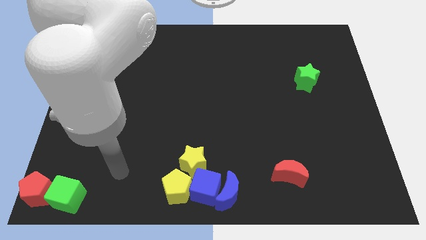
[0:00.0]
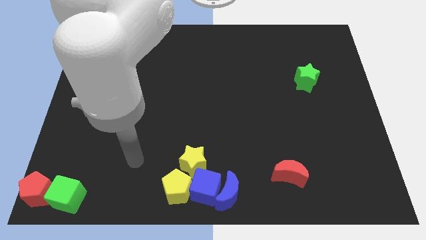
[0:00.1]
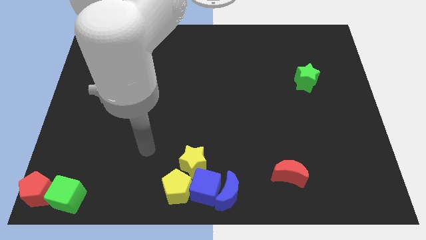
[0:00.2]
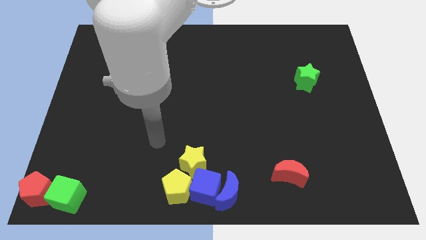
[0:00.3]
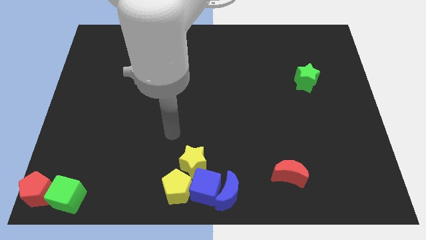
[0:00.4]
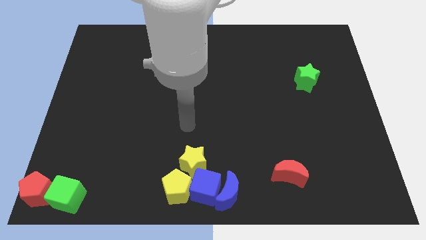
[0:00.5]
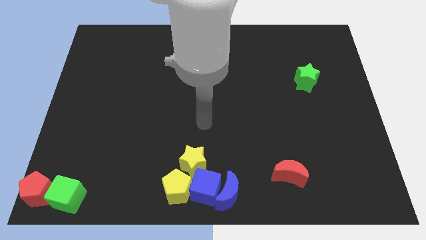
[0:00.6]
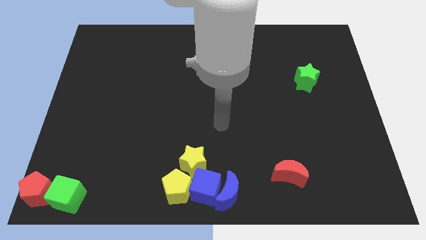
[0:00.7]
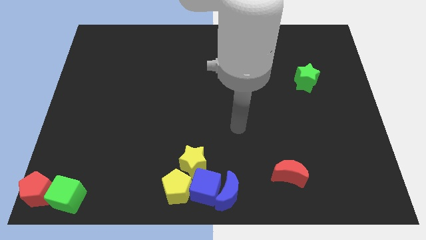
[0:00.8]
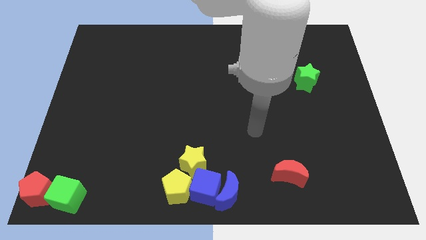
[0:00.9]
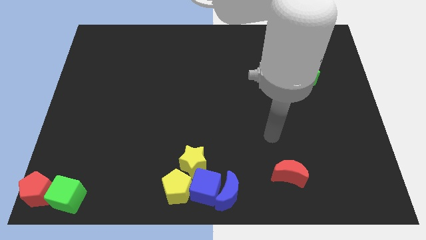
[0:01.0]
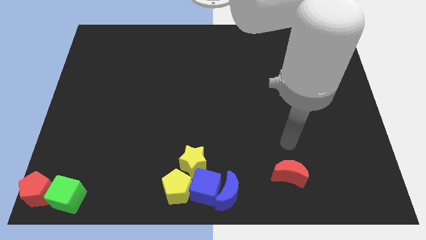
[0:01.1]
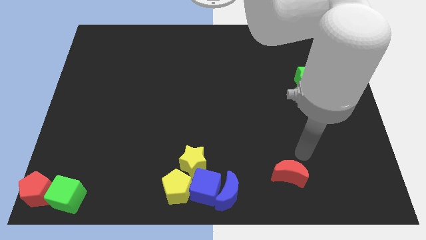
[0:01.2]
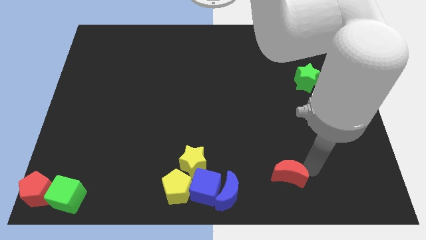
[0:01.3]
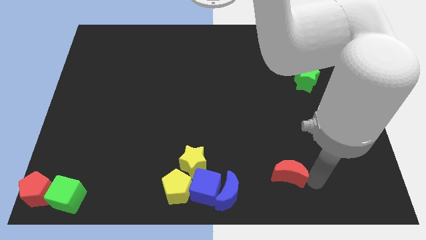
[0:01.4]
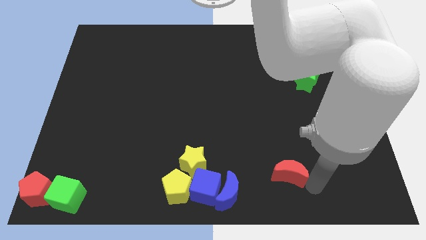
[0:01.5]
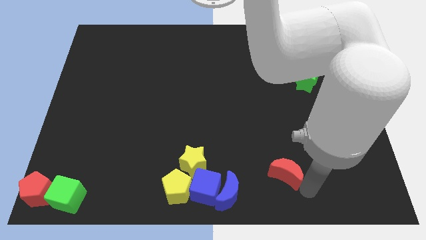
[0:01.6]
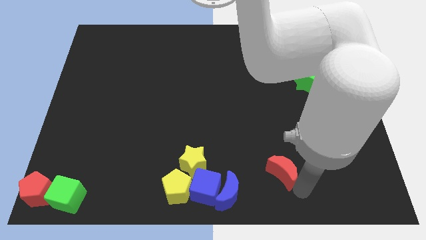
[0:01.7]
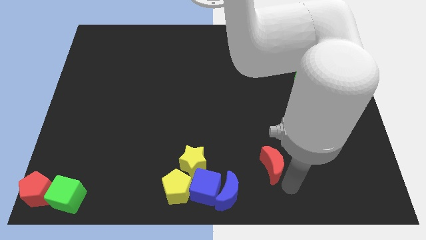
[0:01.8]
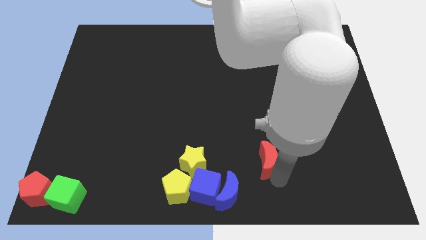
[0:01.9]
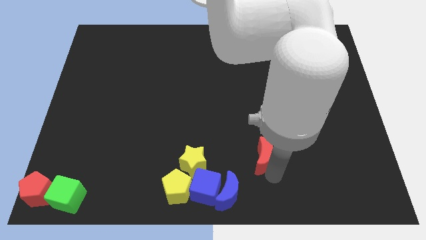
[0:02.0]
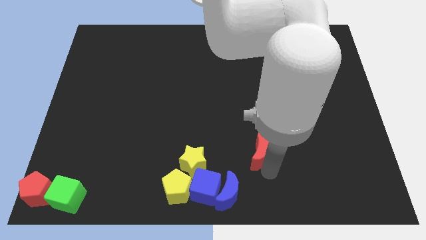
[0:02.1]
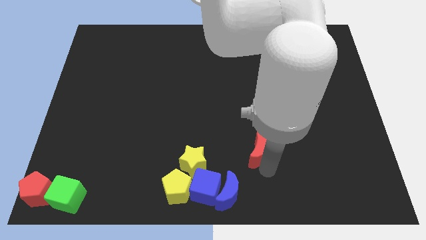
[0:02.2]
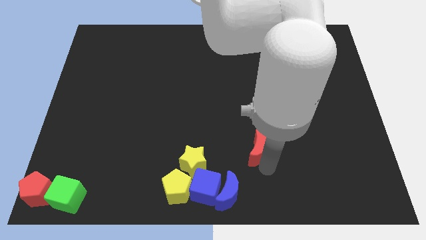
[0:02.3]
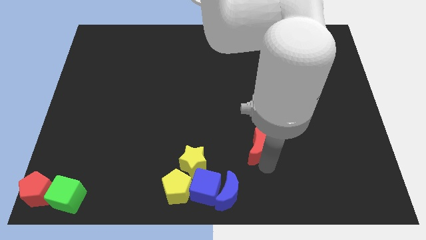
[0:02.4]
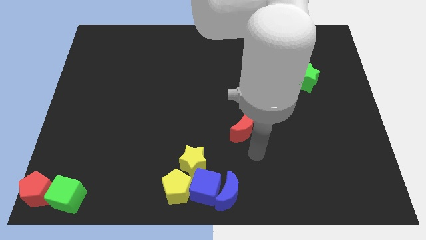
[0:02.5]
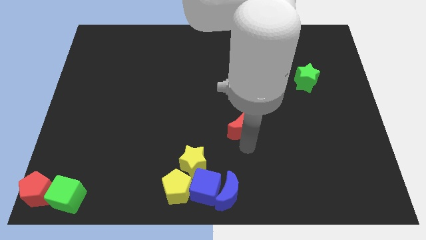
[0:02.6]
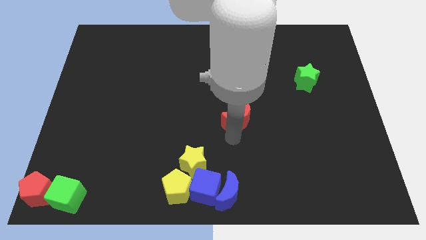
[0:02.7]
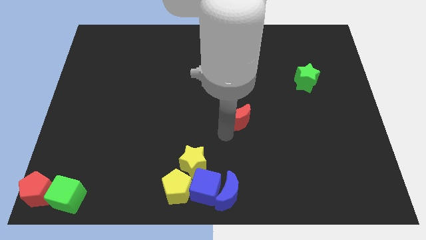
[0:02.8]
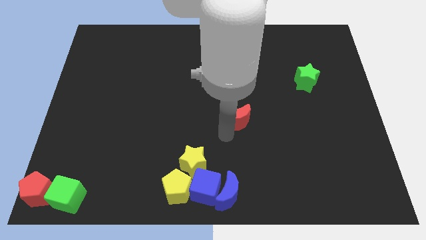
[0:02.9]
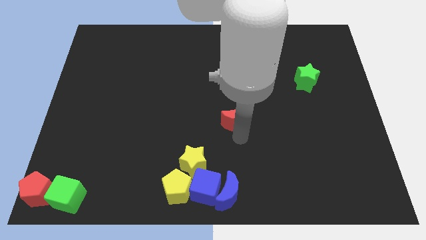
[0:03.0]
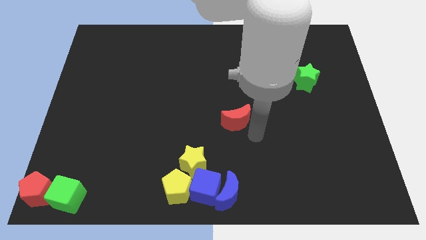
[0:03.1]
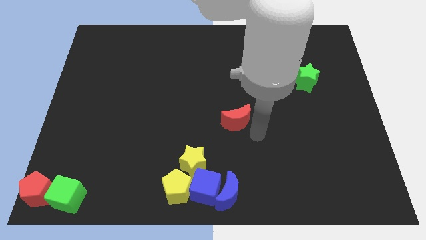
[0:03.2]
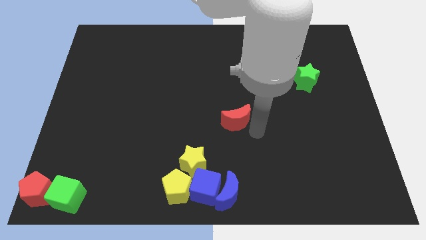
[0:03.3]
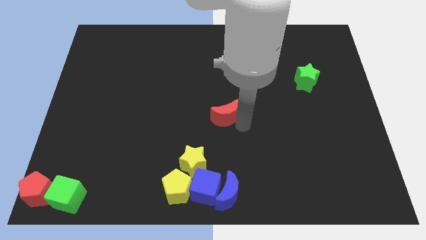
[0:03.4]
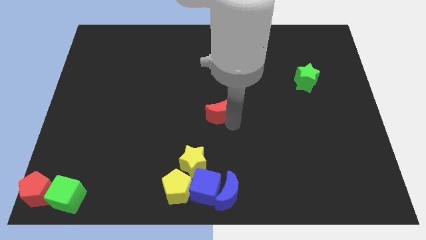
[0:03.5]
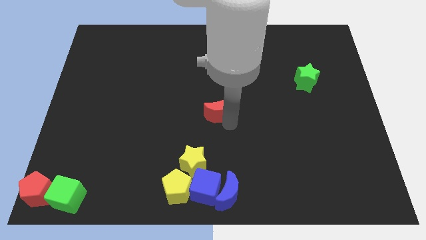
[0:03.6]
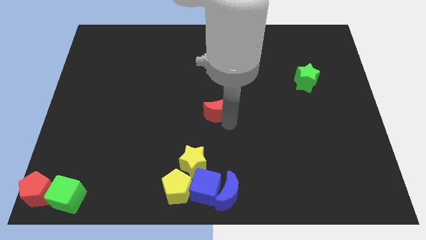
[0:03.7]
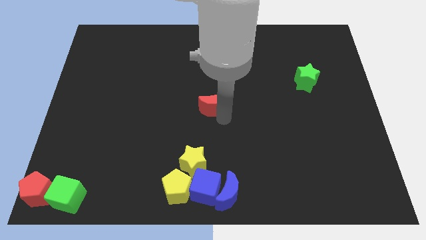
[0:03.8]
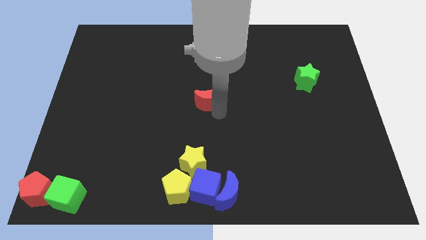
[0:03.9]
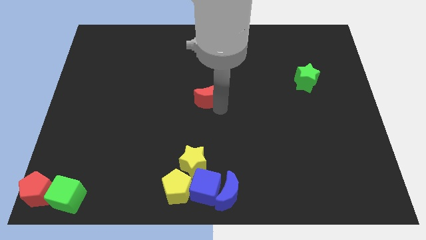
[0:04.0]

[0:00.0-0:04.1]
move the red moon to the center of the table

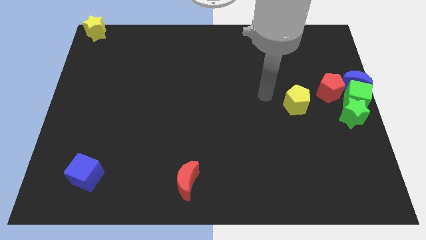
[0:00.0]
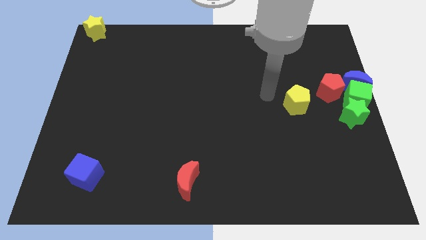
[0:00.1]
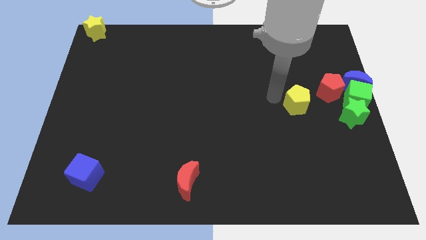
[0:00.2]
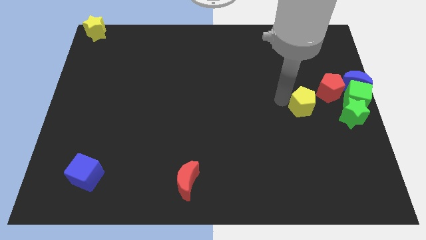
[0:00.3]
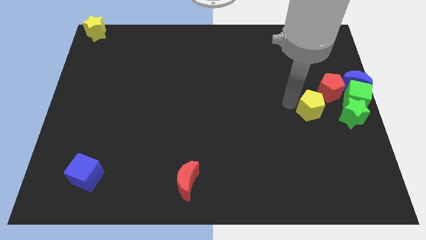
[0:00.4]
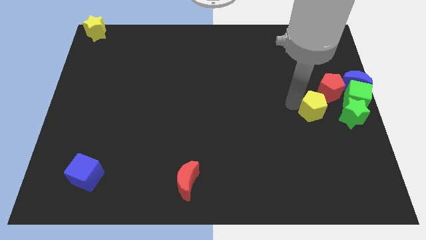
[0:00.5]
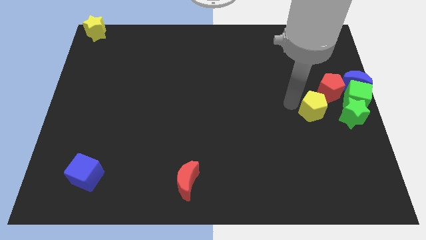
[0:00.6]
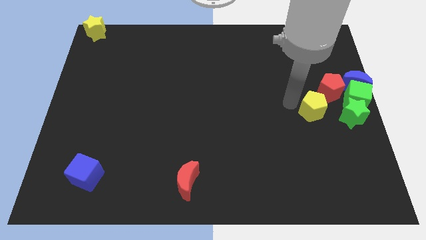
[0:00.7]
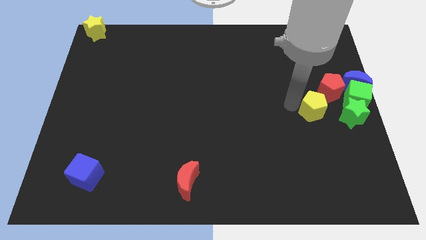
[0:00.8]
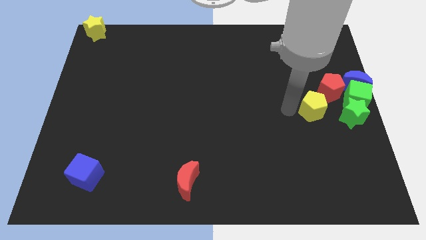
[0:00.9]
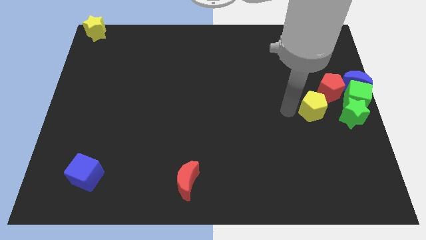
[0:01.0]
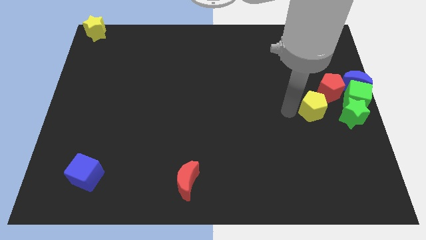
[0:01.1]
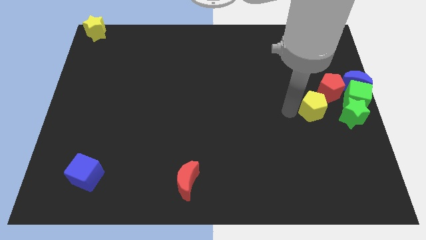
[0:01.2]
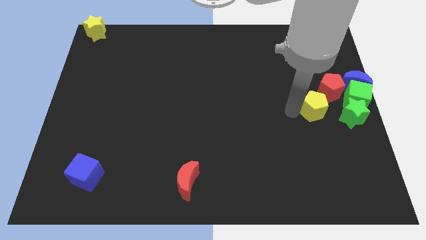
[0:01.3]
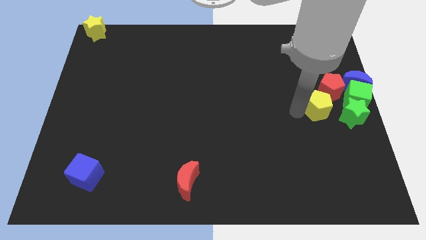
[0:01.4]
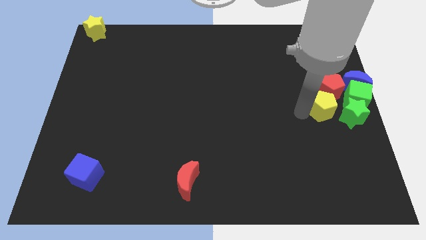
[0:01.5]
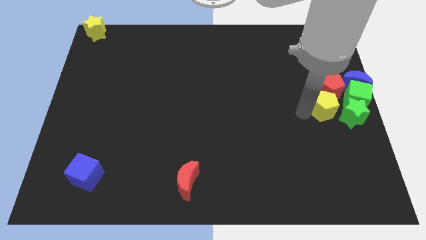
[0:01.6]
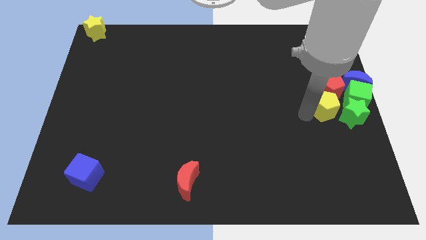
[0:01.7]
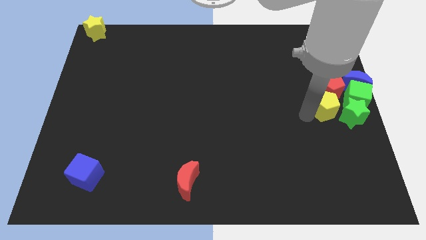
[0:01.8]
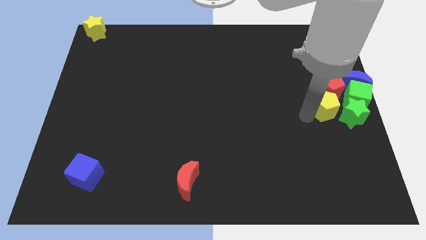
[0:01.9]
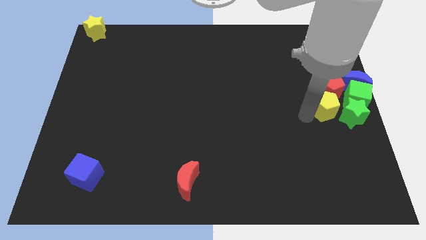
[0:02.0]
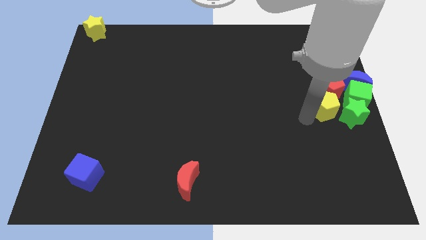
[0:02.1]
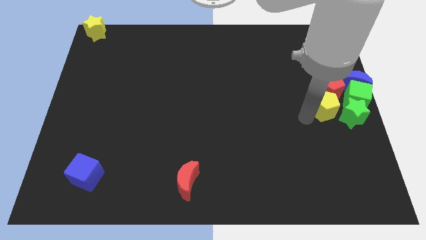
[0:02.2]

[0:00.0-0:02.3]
place the yellow pentagon below the red pentagon

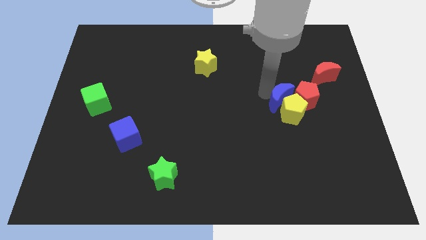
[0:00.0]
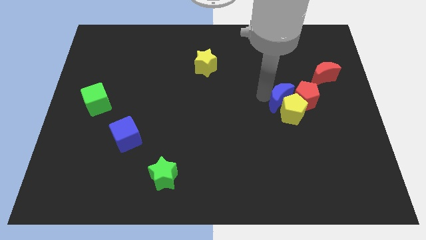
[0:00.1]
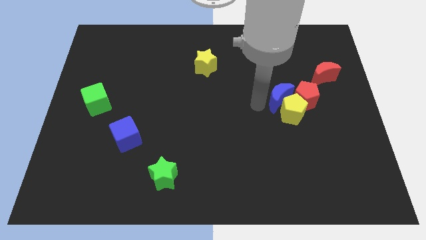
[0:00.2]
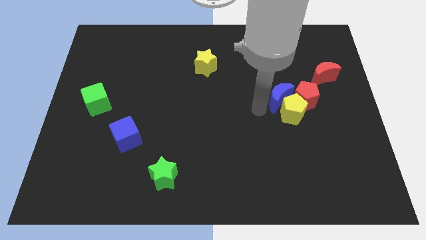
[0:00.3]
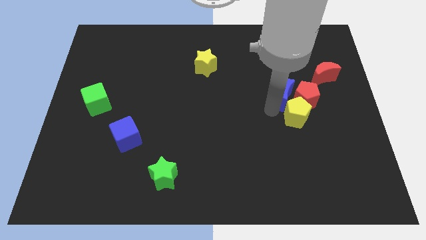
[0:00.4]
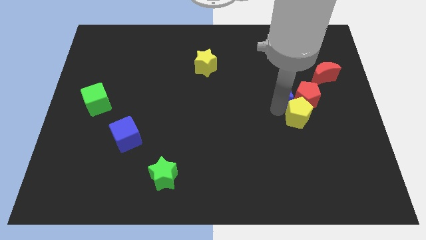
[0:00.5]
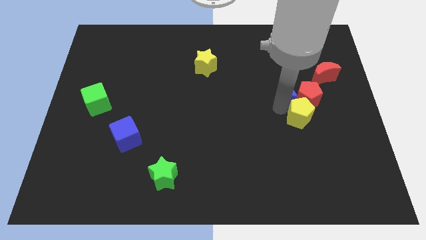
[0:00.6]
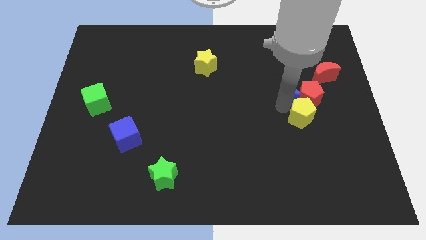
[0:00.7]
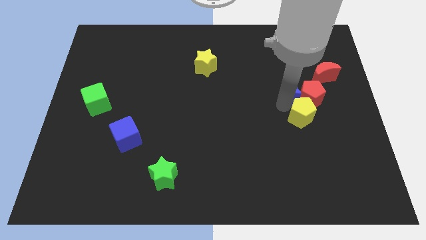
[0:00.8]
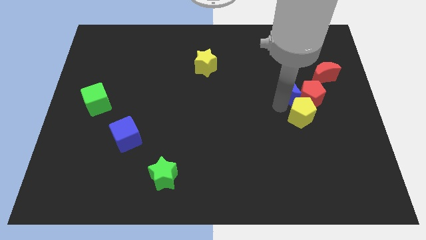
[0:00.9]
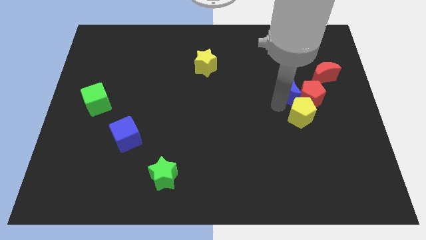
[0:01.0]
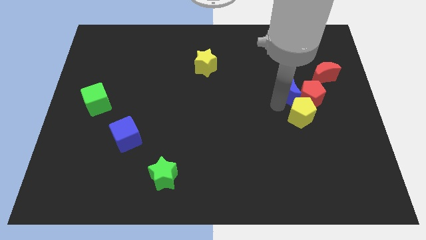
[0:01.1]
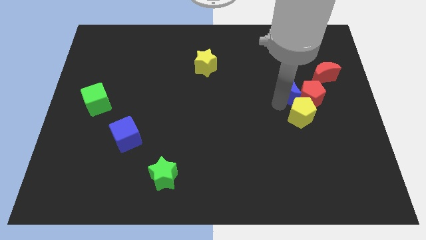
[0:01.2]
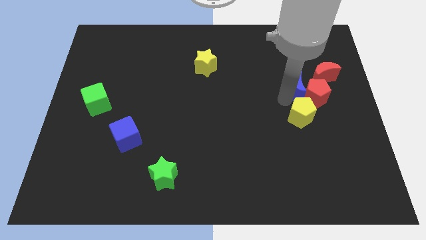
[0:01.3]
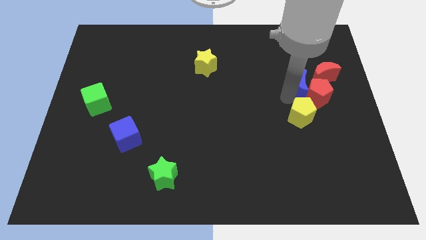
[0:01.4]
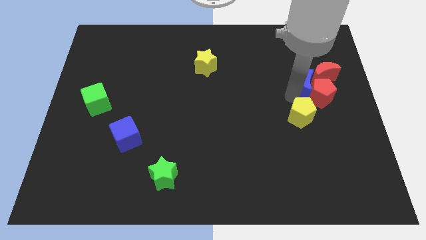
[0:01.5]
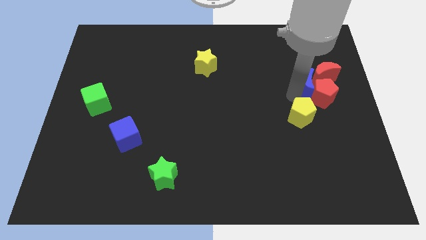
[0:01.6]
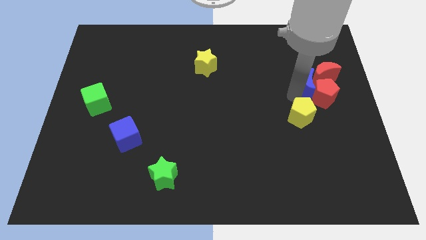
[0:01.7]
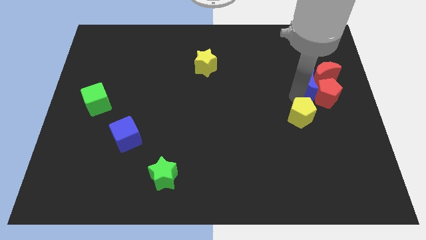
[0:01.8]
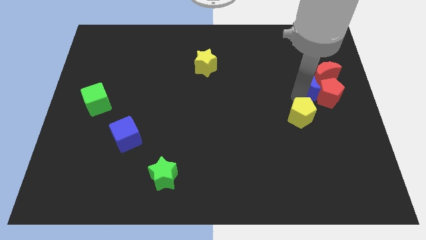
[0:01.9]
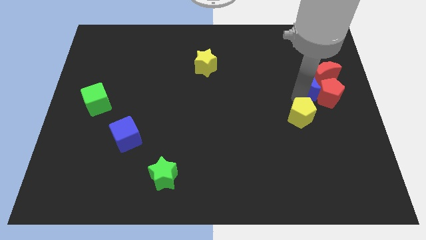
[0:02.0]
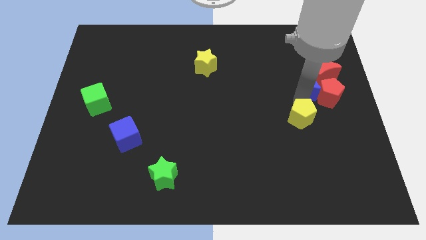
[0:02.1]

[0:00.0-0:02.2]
drag the red pentagon with the blue crescent into the red crescent

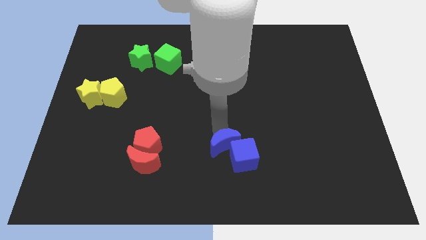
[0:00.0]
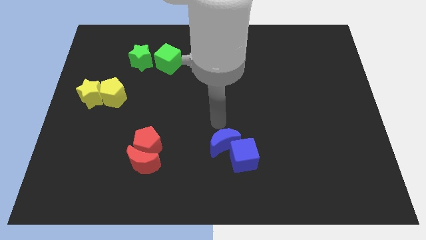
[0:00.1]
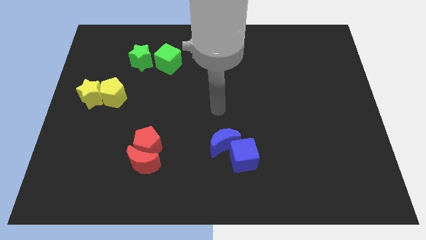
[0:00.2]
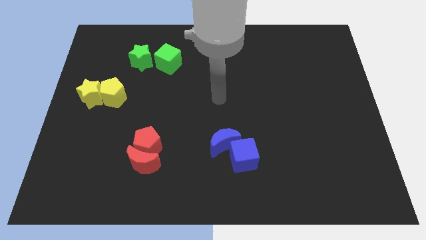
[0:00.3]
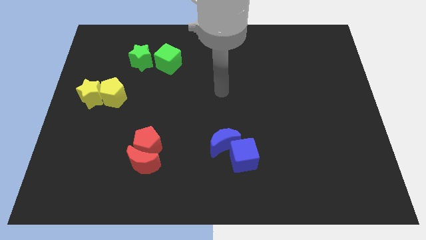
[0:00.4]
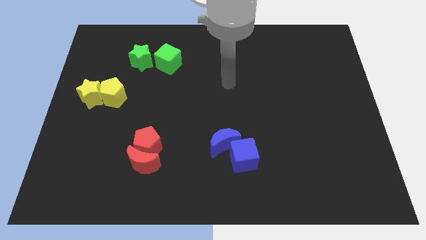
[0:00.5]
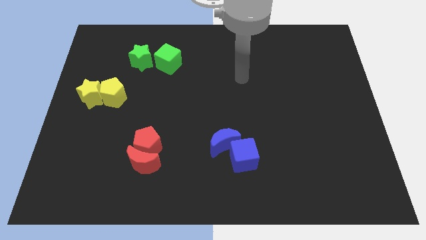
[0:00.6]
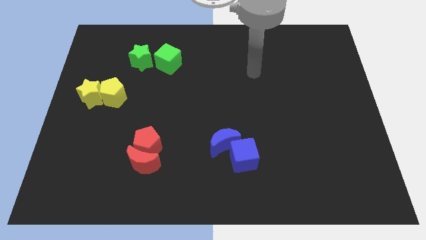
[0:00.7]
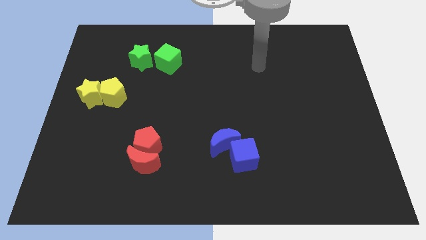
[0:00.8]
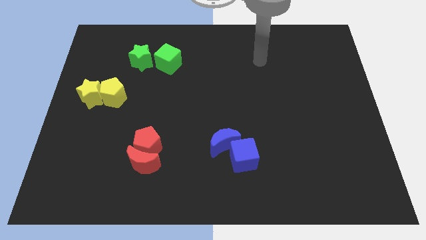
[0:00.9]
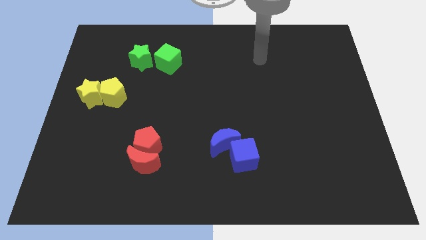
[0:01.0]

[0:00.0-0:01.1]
point your arm at the right of the green cube
